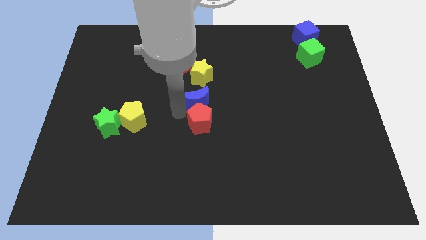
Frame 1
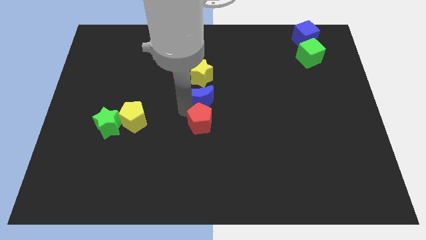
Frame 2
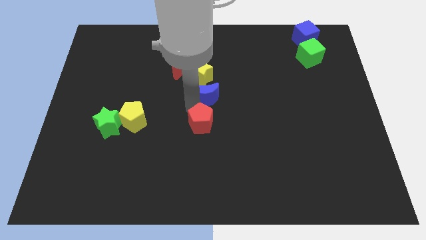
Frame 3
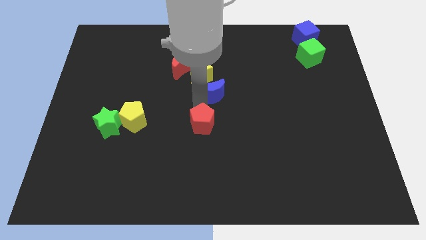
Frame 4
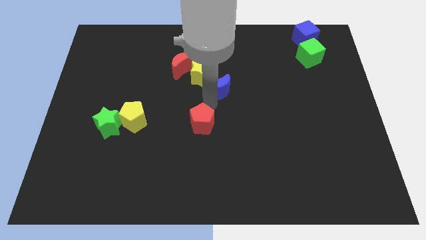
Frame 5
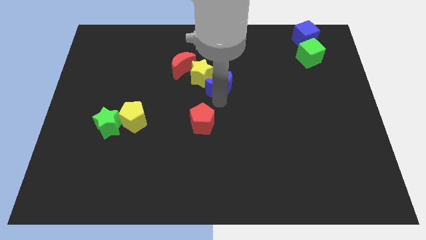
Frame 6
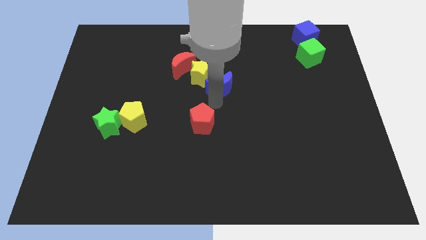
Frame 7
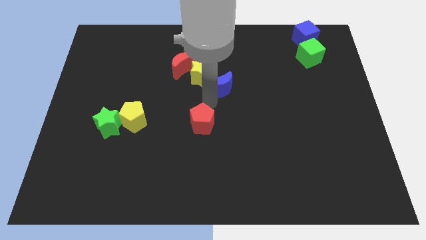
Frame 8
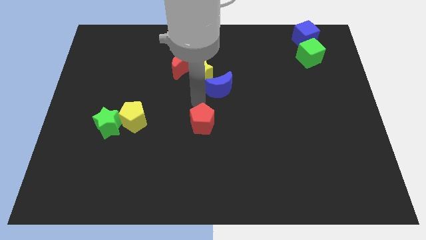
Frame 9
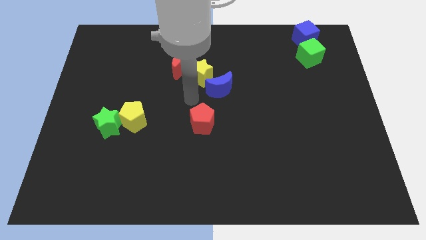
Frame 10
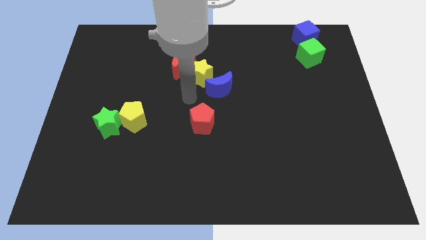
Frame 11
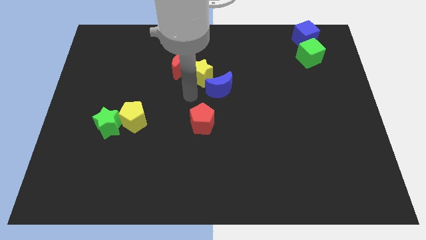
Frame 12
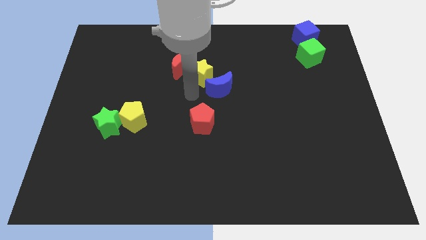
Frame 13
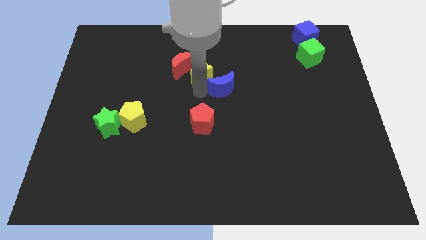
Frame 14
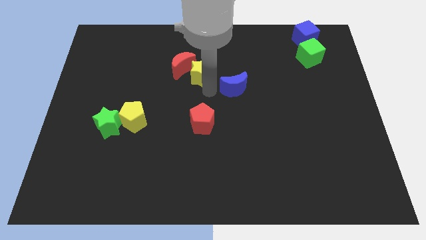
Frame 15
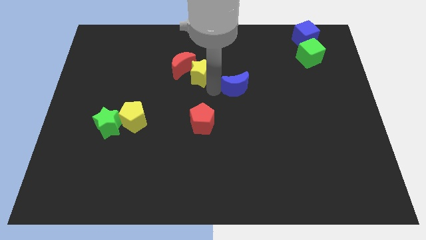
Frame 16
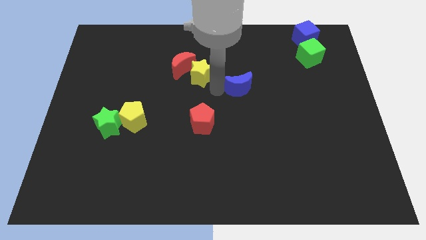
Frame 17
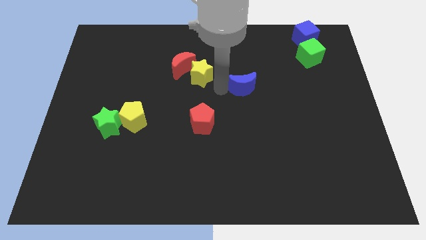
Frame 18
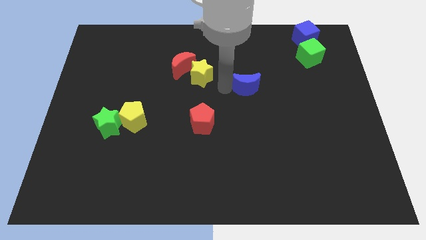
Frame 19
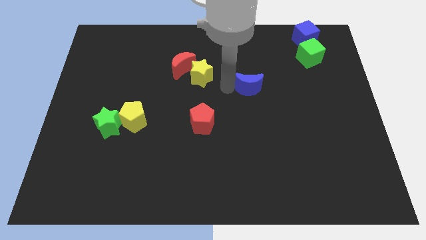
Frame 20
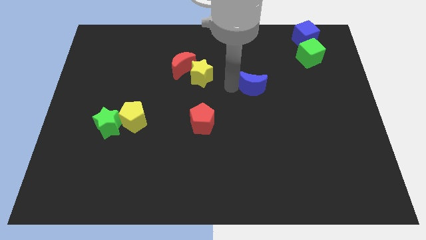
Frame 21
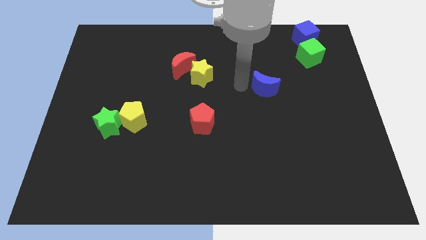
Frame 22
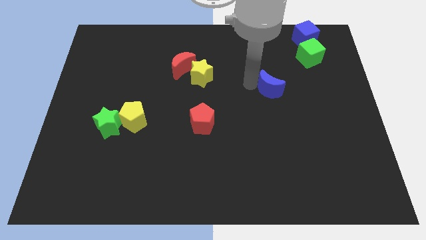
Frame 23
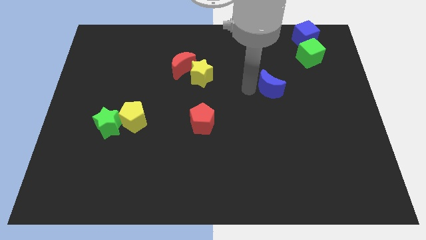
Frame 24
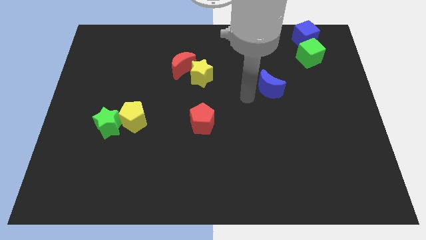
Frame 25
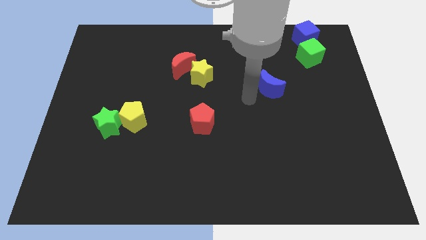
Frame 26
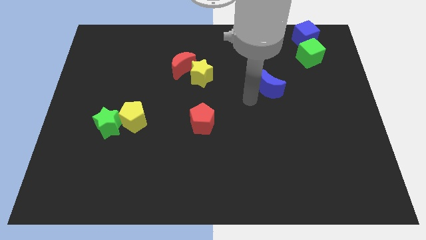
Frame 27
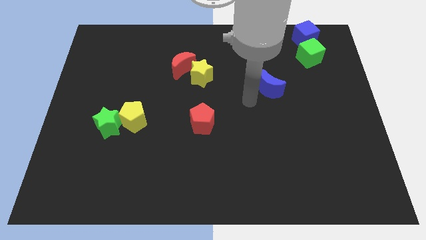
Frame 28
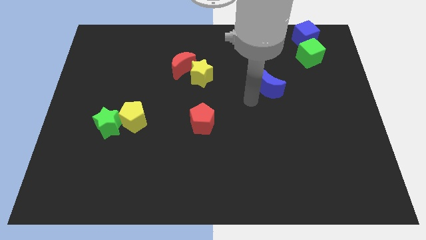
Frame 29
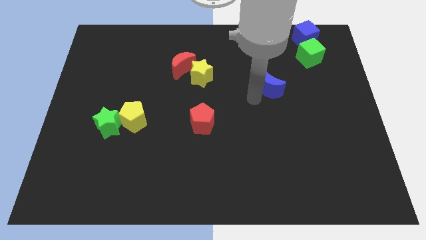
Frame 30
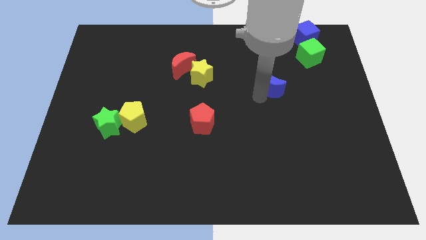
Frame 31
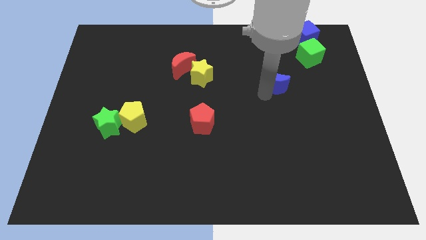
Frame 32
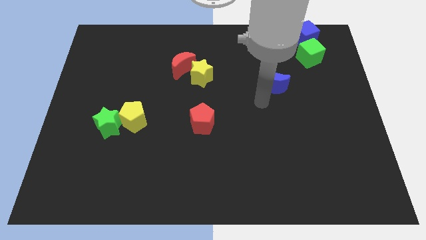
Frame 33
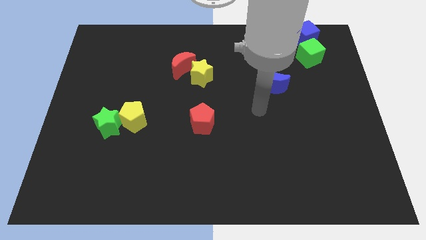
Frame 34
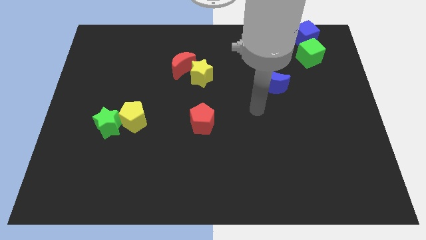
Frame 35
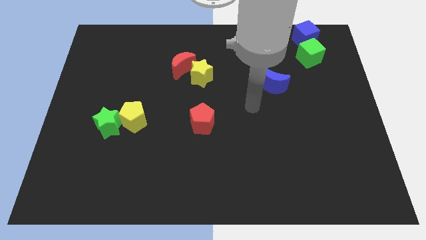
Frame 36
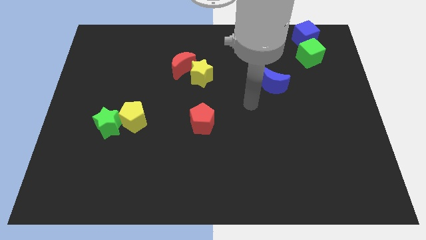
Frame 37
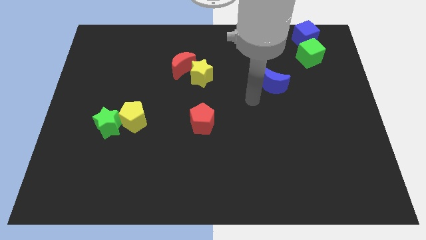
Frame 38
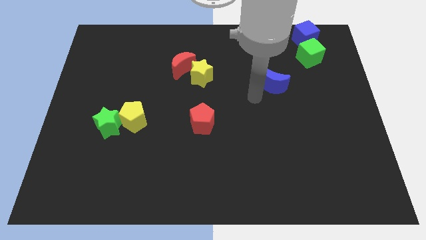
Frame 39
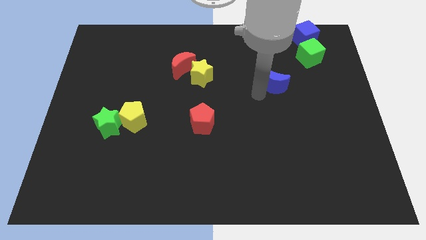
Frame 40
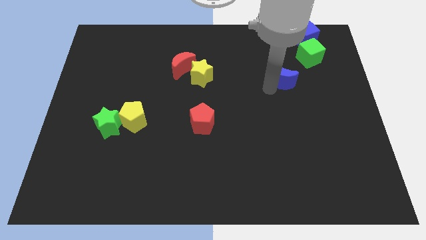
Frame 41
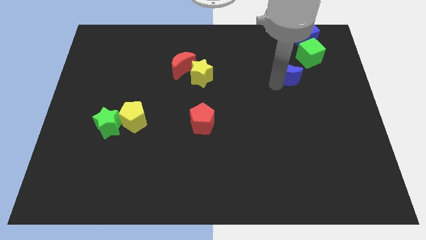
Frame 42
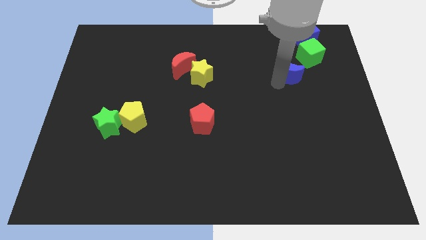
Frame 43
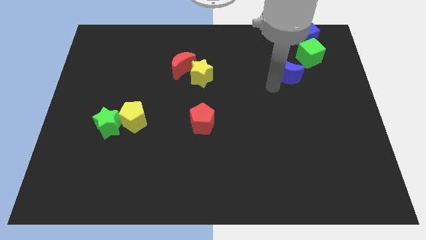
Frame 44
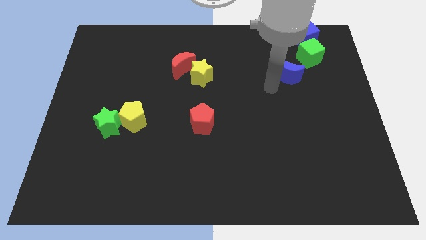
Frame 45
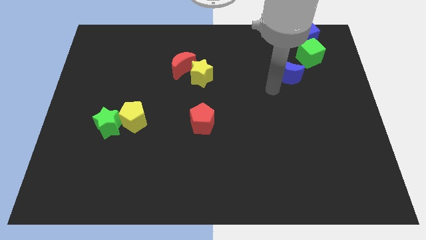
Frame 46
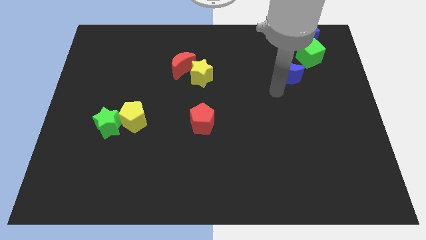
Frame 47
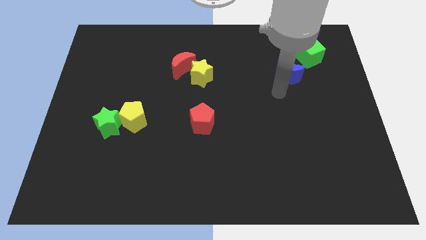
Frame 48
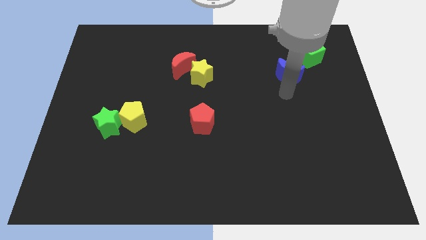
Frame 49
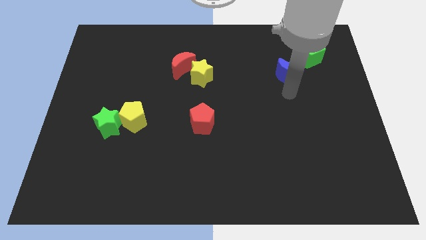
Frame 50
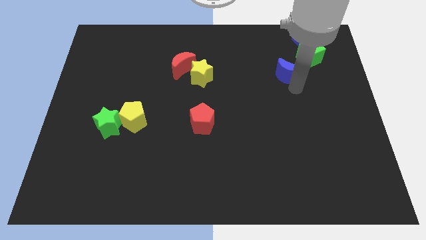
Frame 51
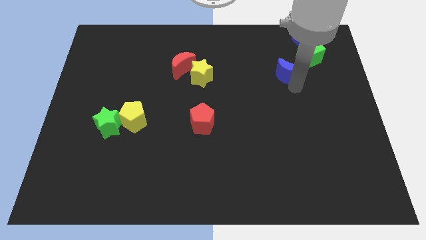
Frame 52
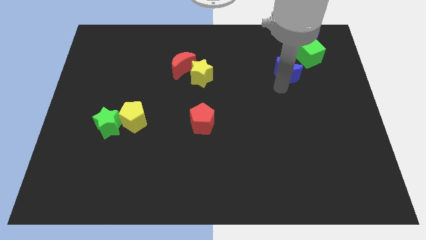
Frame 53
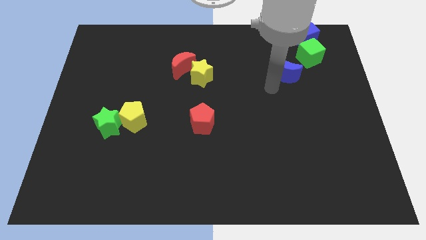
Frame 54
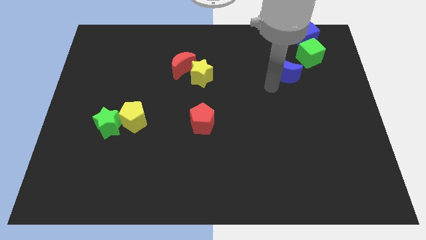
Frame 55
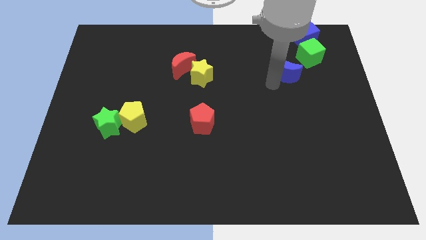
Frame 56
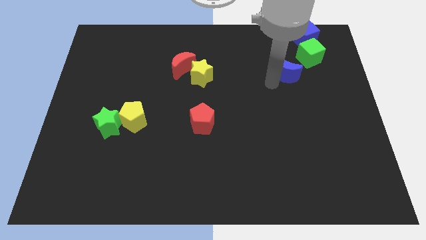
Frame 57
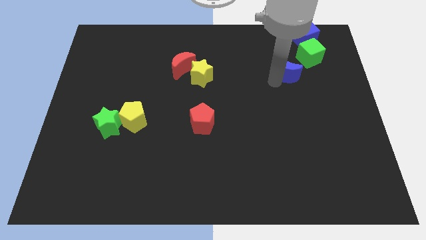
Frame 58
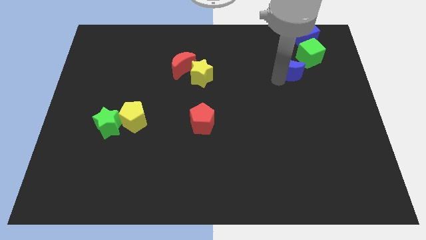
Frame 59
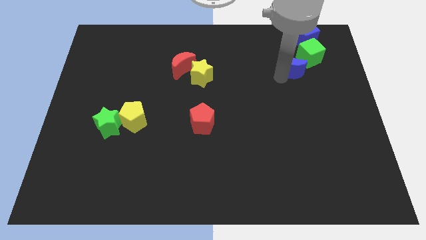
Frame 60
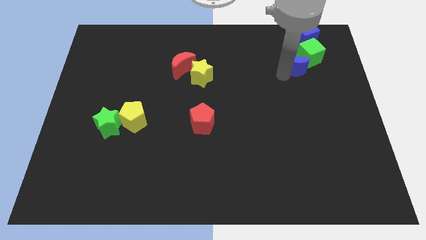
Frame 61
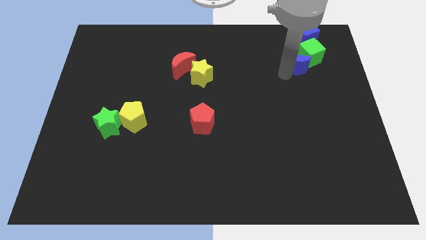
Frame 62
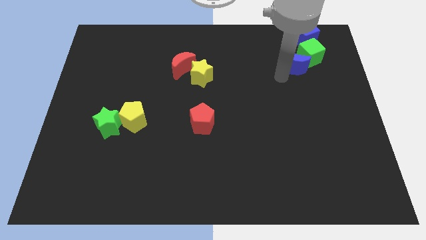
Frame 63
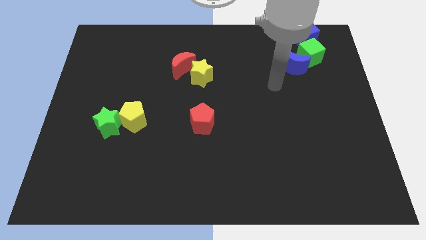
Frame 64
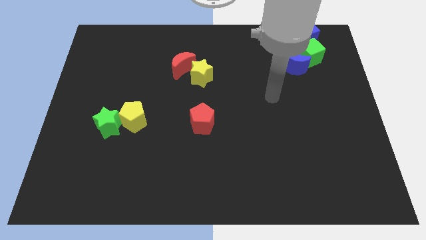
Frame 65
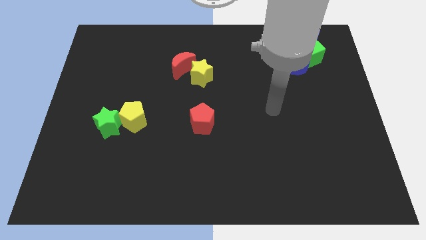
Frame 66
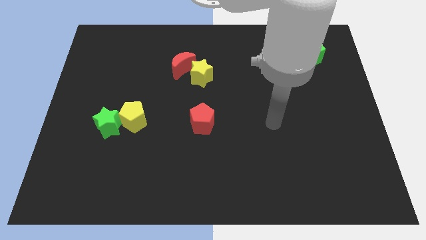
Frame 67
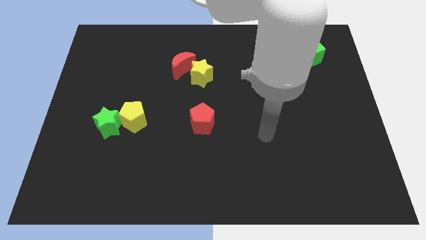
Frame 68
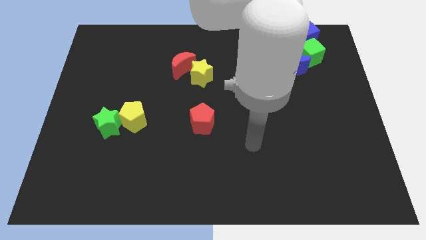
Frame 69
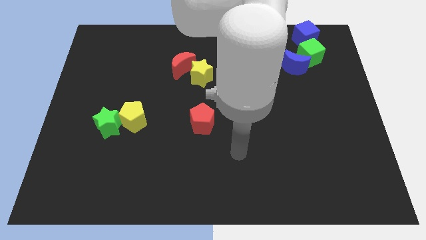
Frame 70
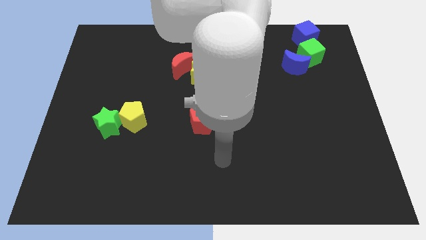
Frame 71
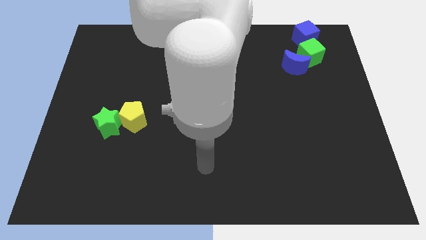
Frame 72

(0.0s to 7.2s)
move the blue moon to the left of the green cube

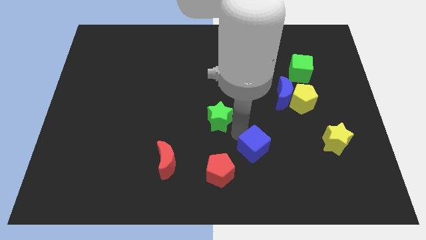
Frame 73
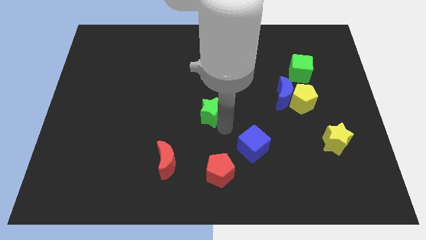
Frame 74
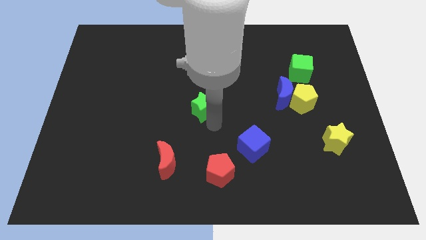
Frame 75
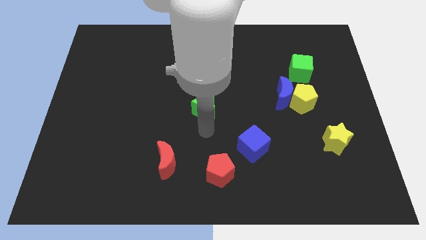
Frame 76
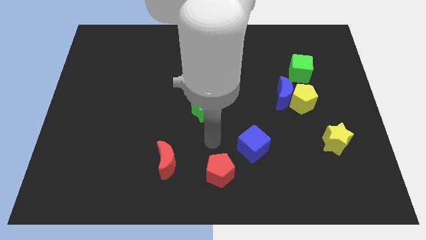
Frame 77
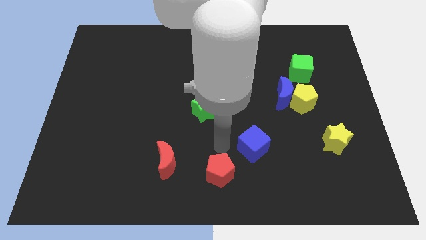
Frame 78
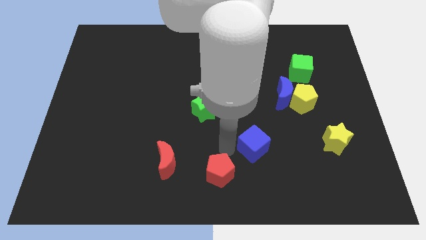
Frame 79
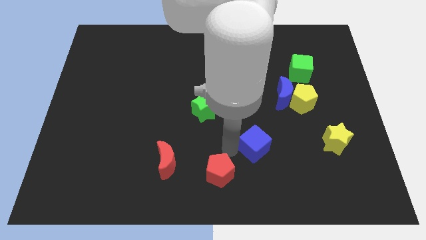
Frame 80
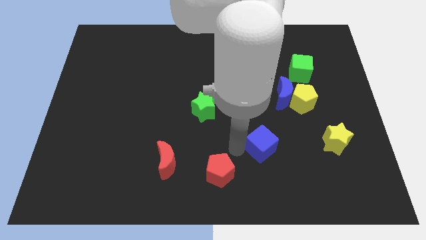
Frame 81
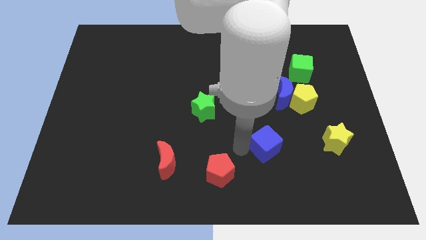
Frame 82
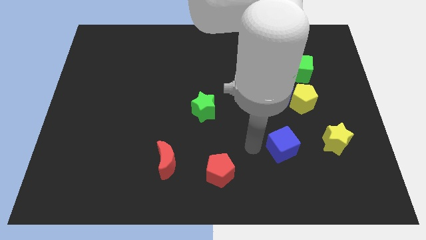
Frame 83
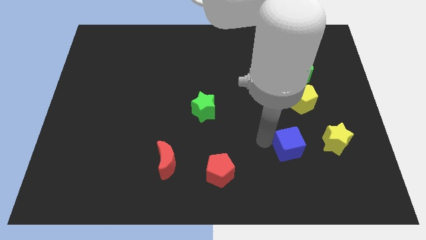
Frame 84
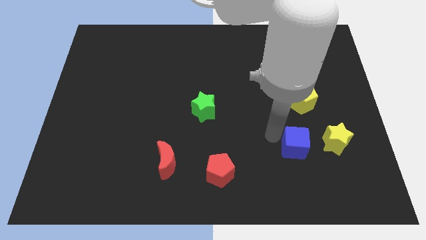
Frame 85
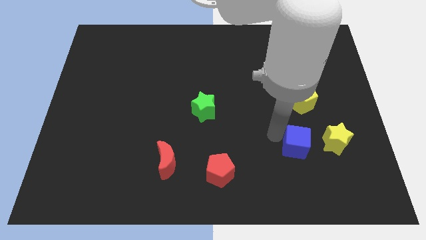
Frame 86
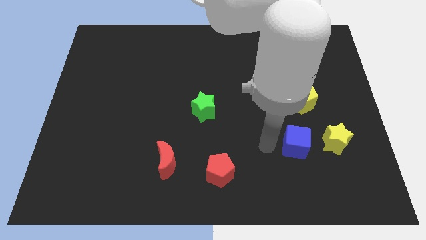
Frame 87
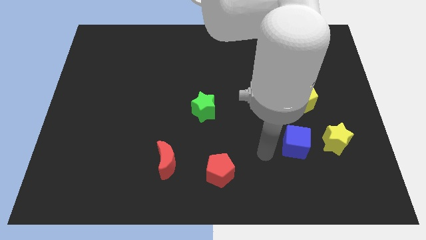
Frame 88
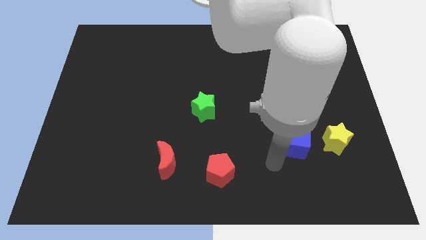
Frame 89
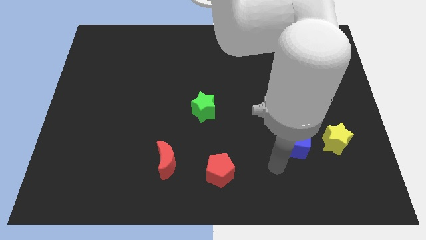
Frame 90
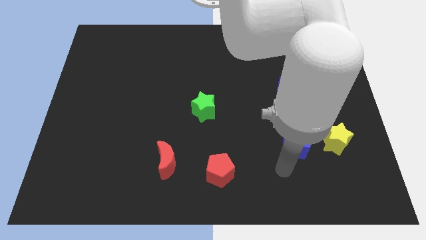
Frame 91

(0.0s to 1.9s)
move blue cube towards the yellow star

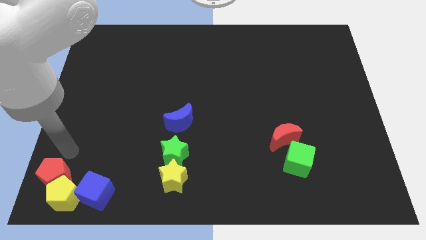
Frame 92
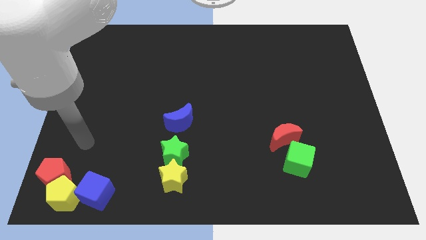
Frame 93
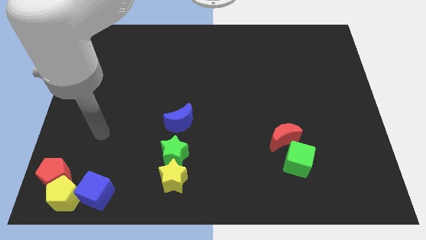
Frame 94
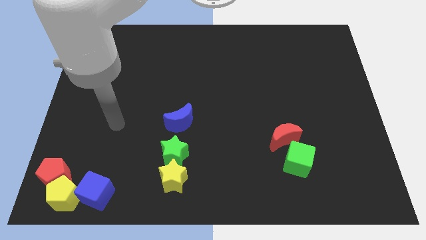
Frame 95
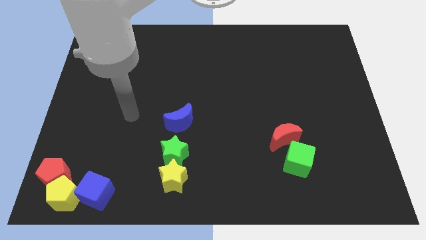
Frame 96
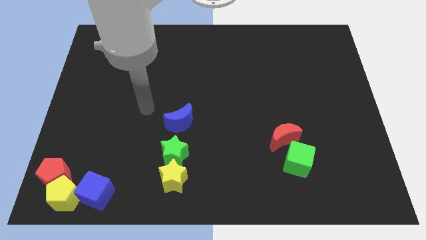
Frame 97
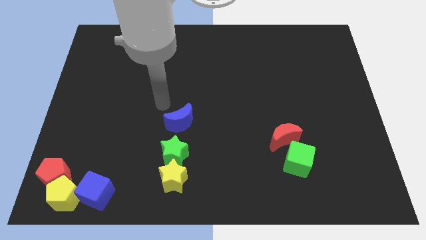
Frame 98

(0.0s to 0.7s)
move arm away from red pentagon
